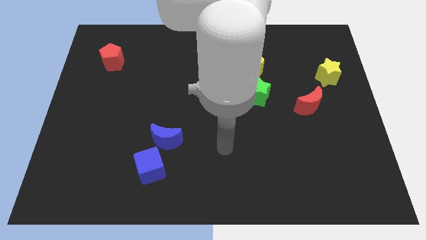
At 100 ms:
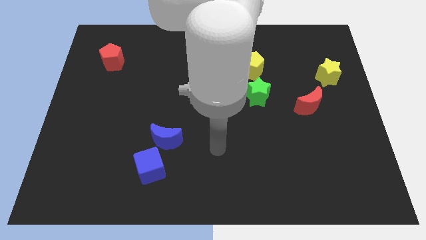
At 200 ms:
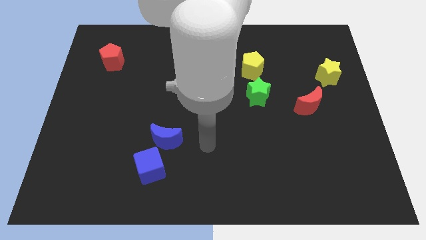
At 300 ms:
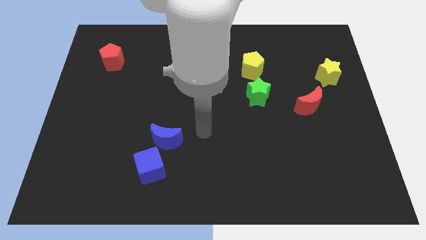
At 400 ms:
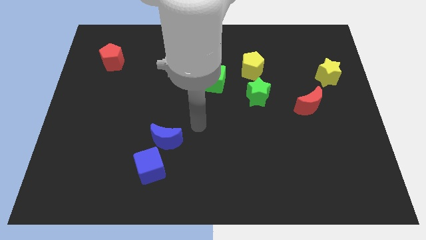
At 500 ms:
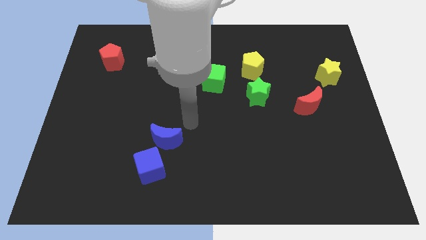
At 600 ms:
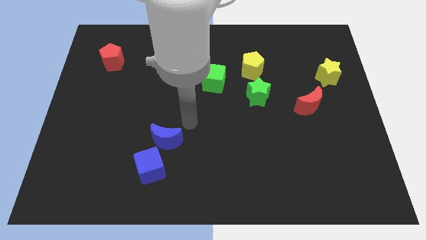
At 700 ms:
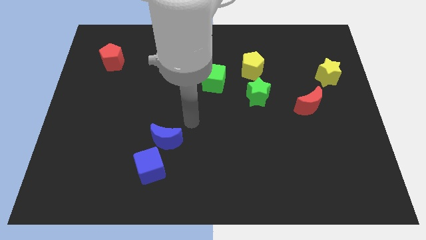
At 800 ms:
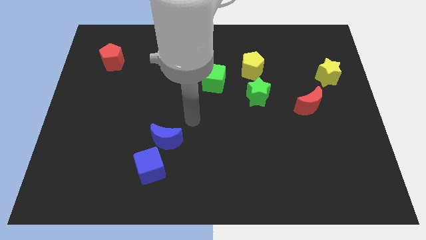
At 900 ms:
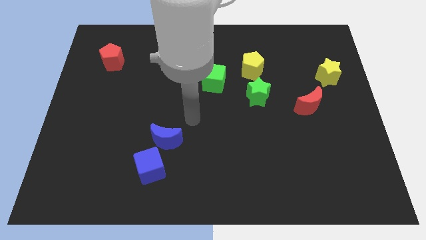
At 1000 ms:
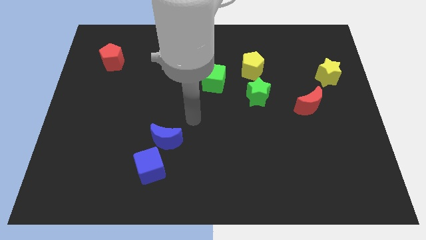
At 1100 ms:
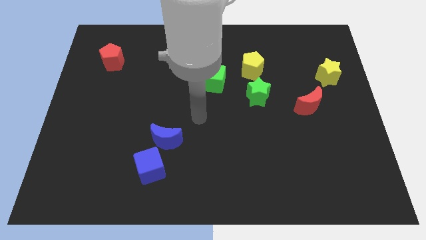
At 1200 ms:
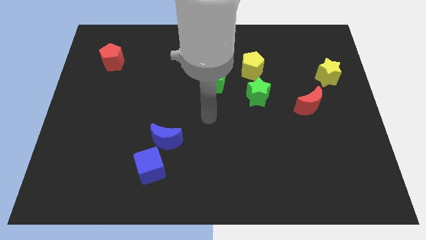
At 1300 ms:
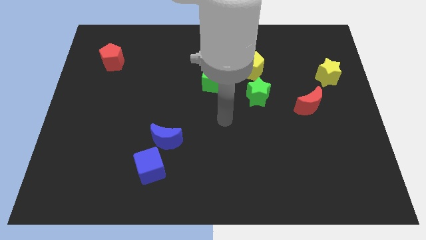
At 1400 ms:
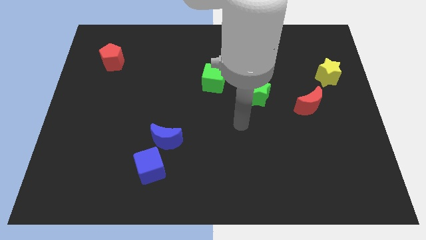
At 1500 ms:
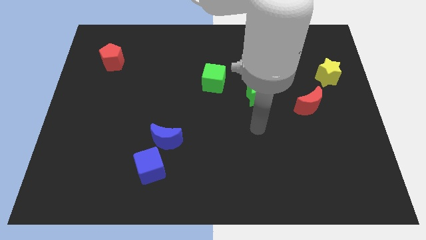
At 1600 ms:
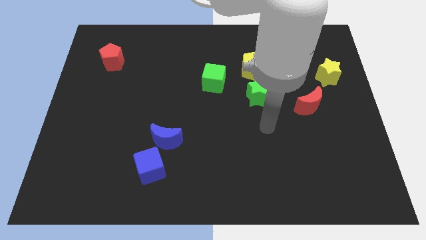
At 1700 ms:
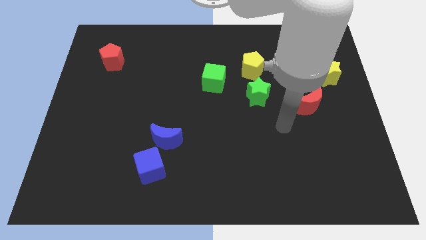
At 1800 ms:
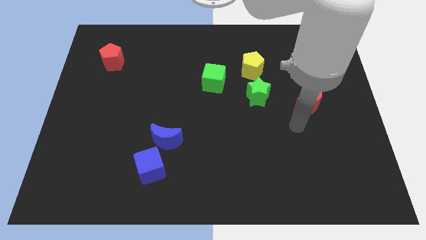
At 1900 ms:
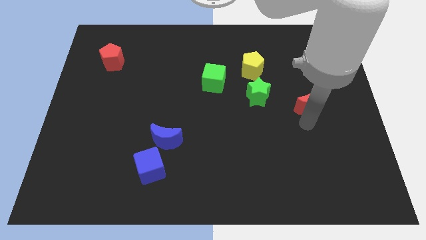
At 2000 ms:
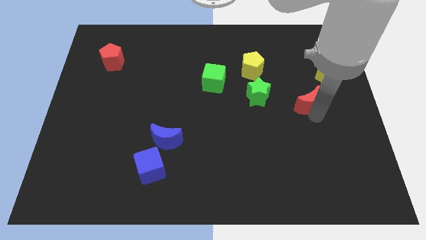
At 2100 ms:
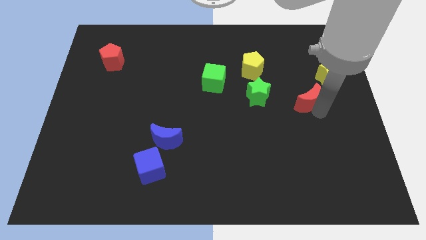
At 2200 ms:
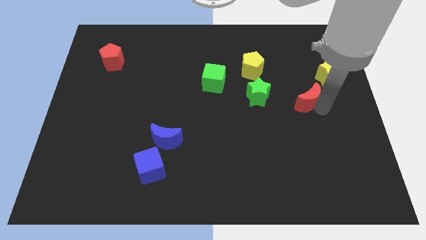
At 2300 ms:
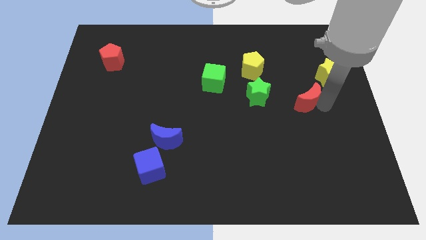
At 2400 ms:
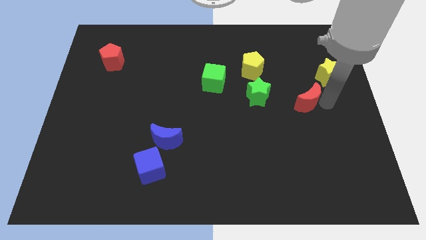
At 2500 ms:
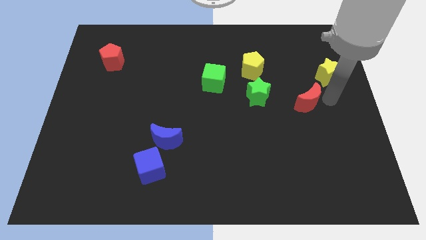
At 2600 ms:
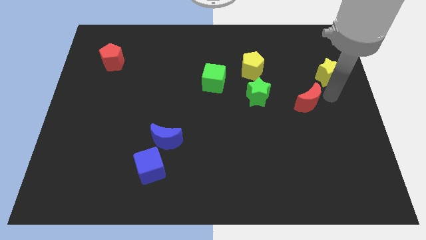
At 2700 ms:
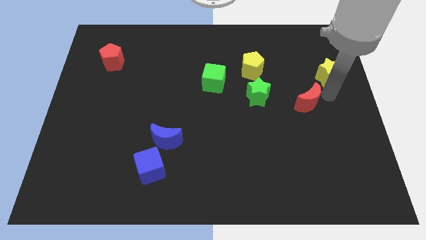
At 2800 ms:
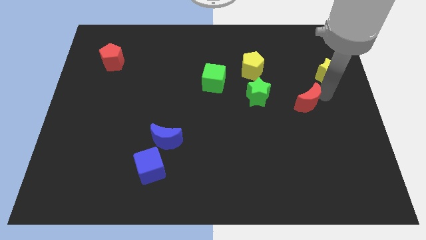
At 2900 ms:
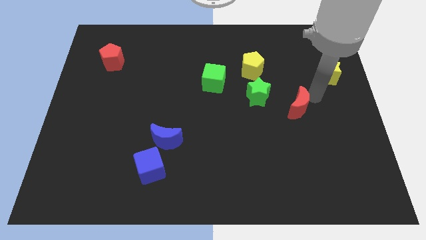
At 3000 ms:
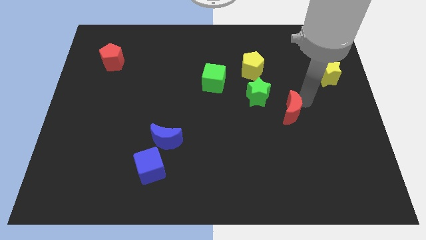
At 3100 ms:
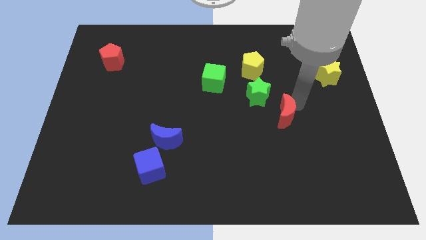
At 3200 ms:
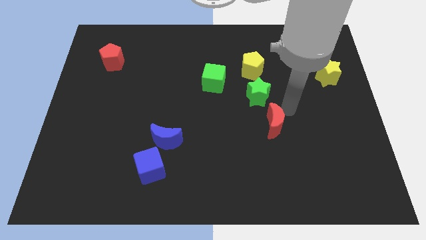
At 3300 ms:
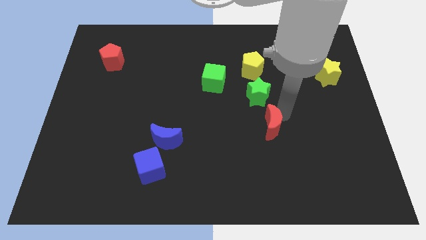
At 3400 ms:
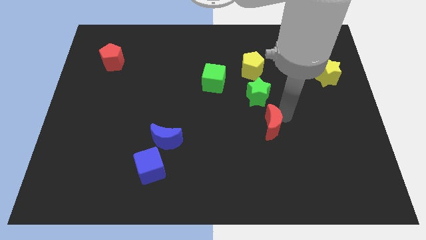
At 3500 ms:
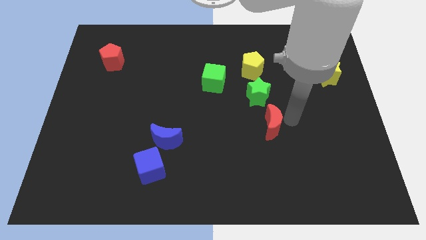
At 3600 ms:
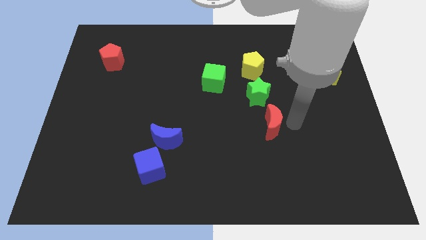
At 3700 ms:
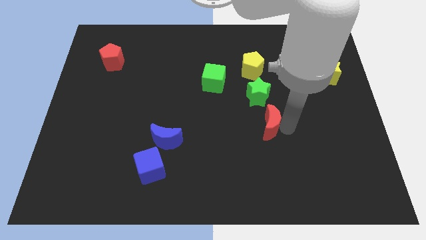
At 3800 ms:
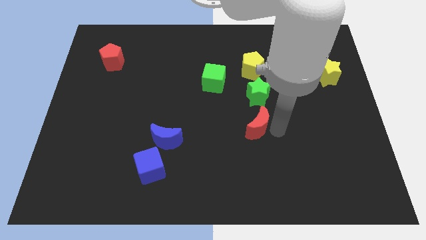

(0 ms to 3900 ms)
push the red crescent to the bottom of the green star

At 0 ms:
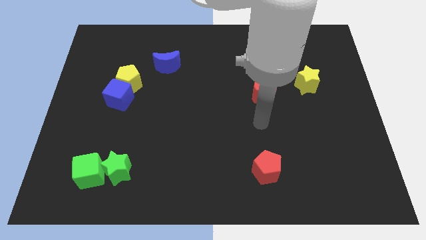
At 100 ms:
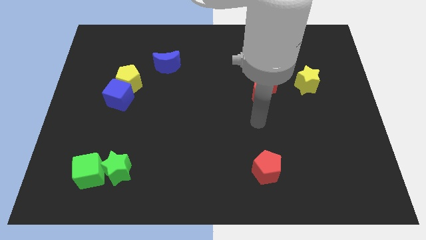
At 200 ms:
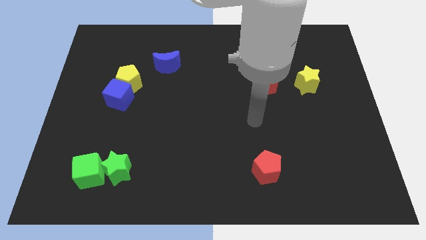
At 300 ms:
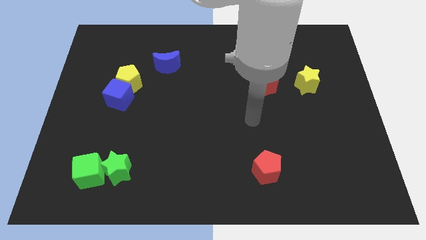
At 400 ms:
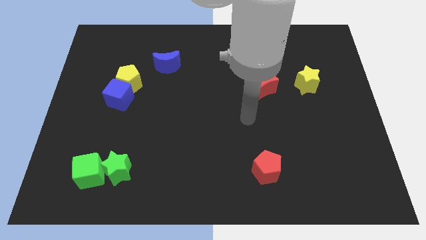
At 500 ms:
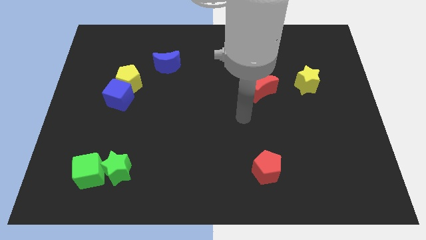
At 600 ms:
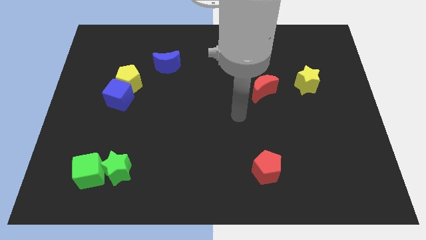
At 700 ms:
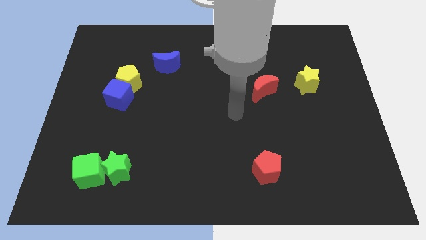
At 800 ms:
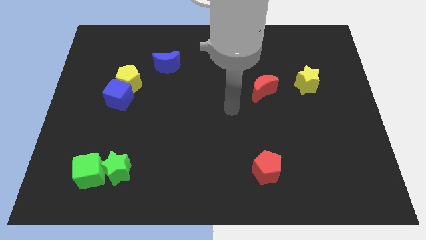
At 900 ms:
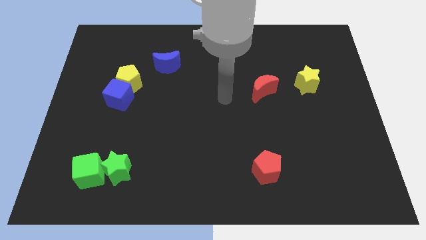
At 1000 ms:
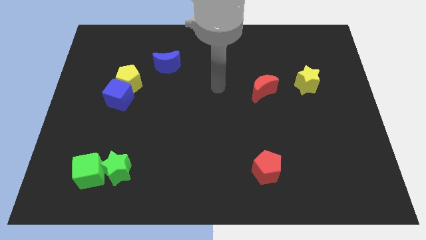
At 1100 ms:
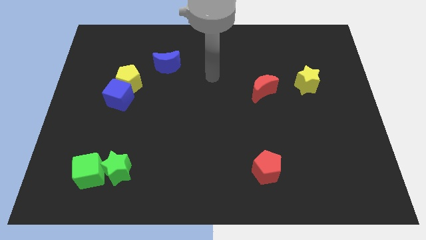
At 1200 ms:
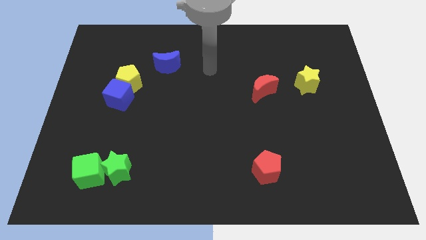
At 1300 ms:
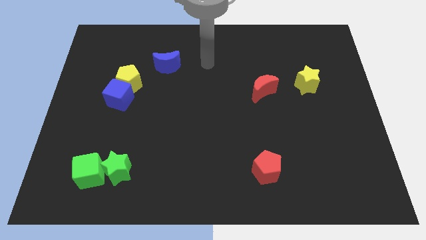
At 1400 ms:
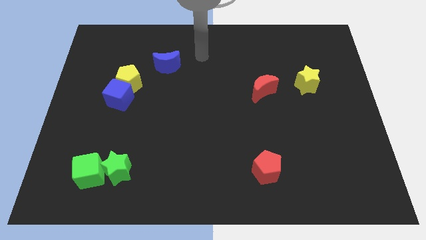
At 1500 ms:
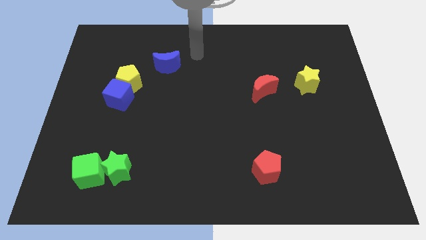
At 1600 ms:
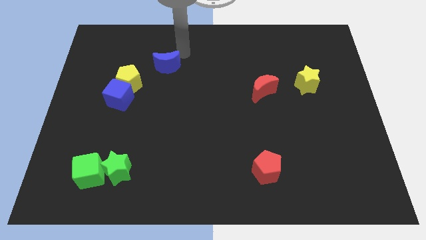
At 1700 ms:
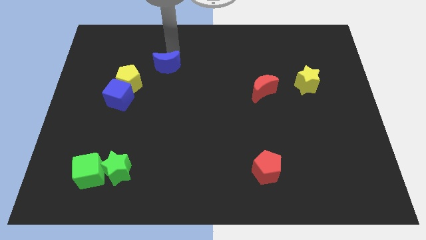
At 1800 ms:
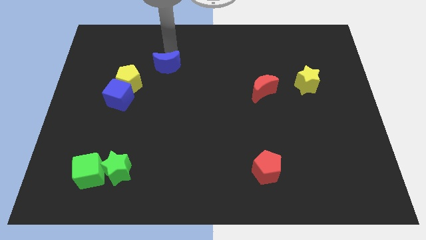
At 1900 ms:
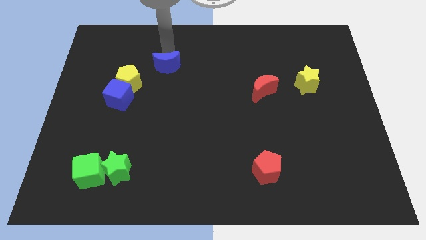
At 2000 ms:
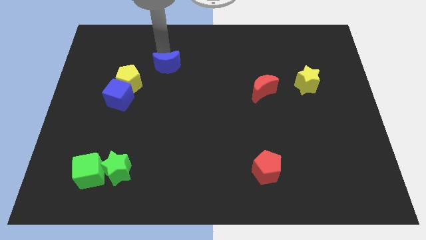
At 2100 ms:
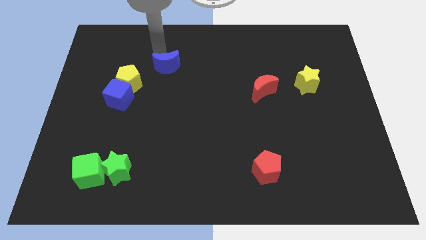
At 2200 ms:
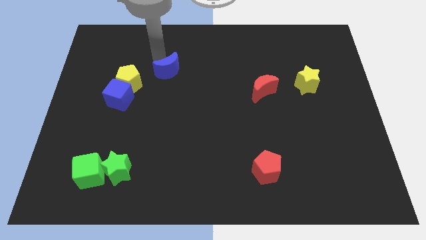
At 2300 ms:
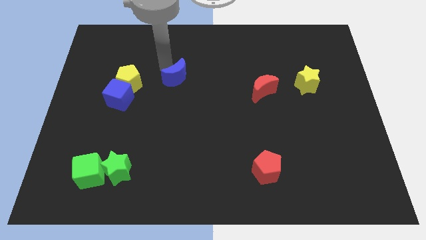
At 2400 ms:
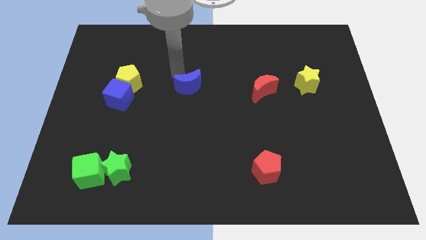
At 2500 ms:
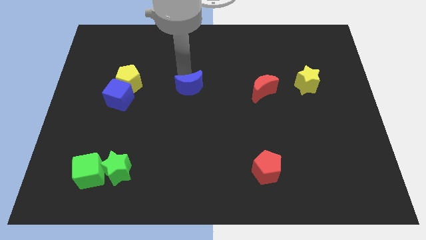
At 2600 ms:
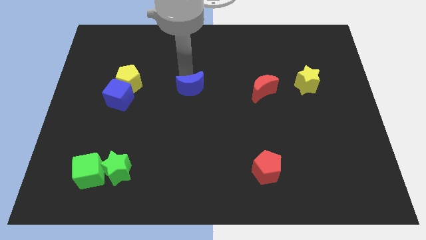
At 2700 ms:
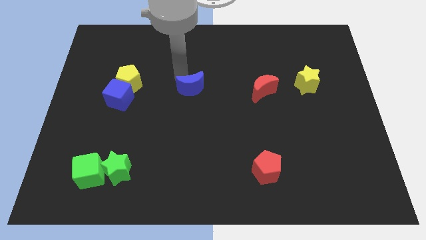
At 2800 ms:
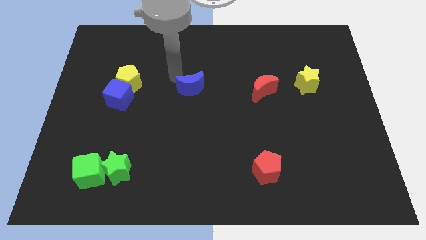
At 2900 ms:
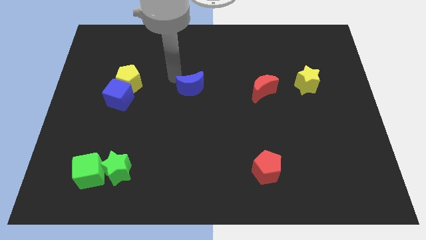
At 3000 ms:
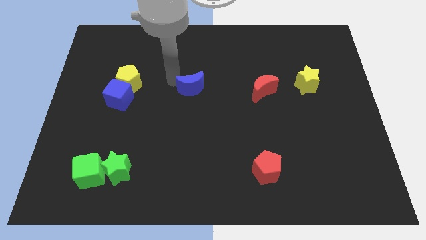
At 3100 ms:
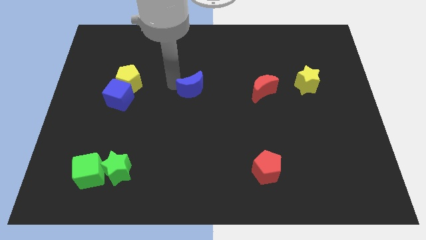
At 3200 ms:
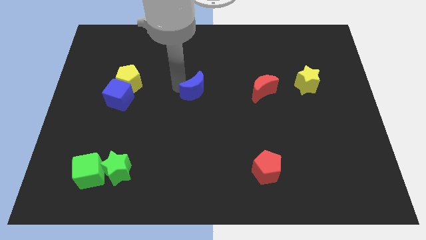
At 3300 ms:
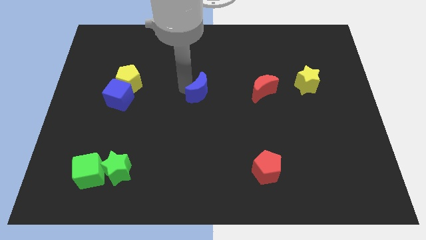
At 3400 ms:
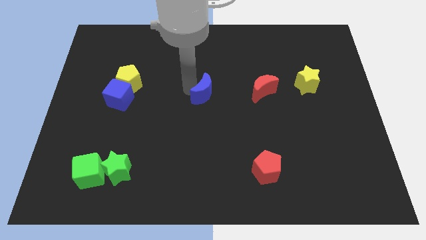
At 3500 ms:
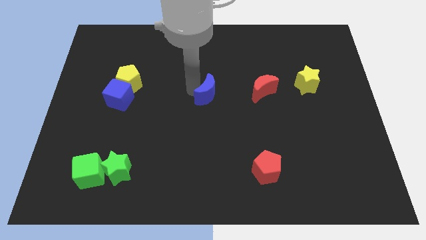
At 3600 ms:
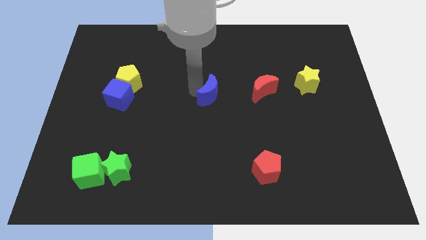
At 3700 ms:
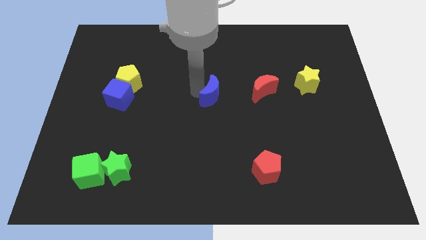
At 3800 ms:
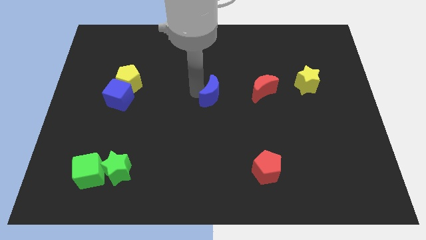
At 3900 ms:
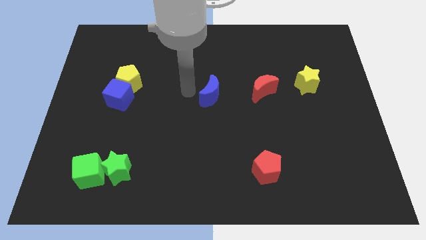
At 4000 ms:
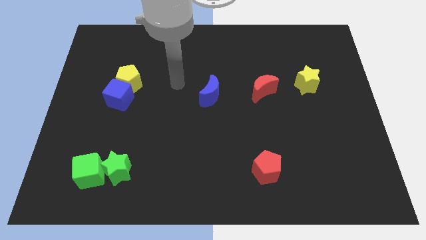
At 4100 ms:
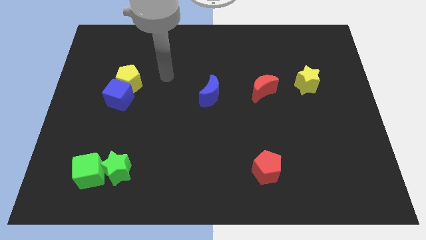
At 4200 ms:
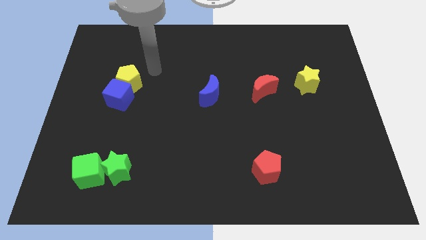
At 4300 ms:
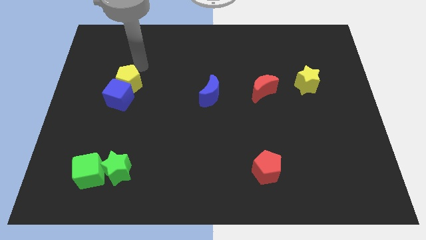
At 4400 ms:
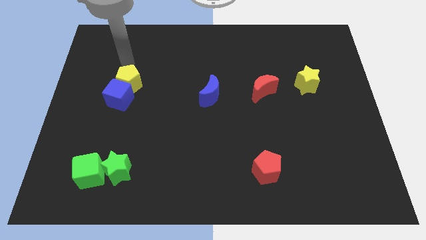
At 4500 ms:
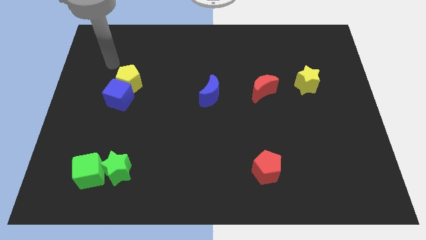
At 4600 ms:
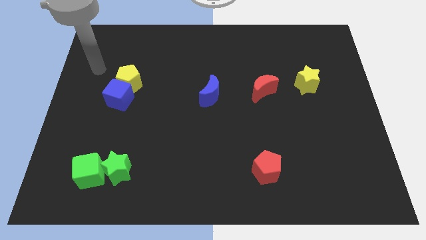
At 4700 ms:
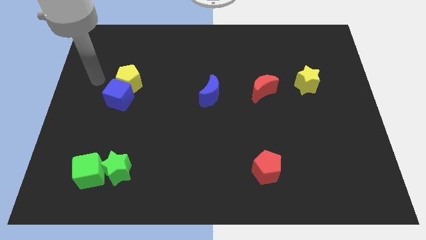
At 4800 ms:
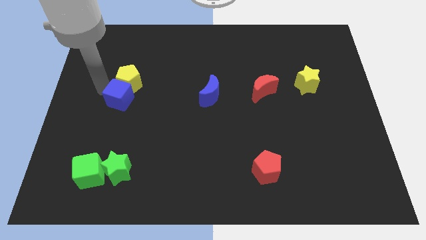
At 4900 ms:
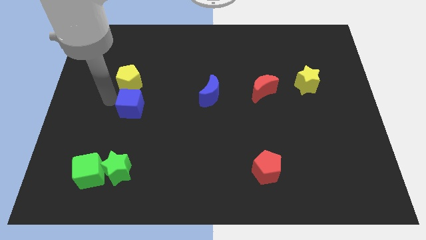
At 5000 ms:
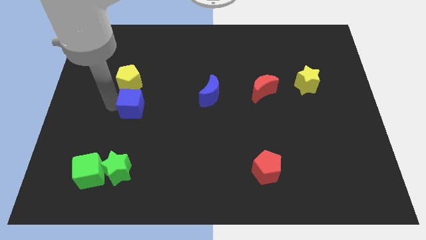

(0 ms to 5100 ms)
push the blue moon to the center of the board

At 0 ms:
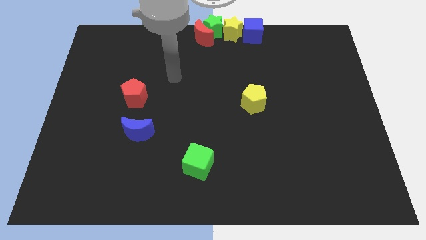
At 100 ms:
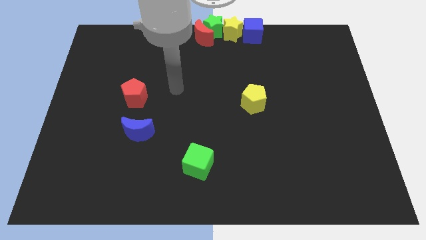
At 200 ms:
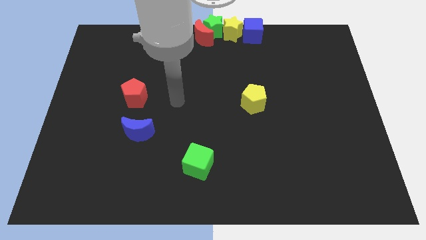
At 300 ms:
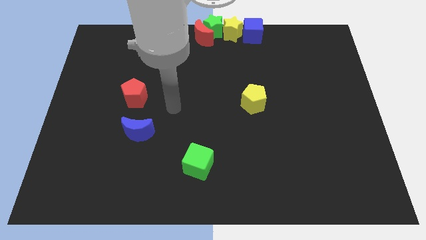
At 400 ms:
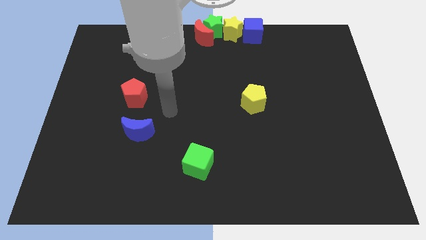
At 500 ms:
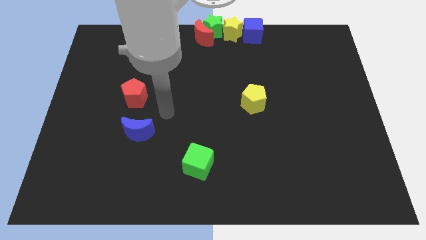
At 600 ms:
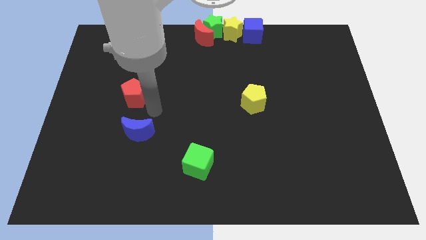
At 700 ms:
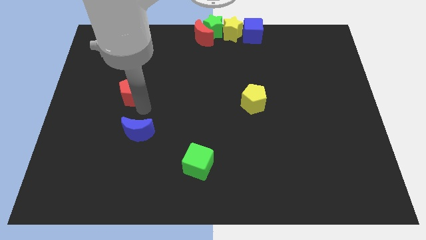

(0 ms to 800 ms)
touch the bottom of red pentagon
